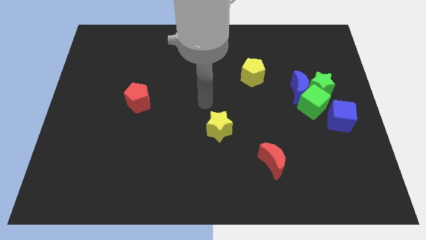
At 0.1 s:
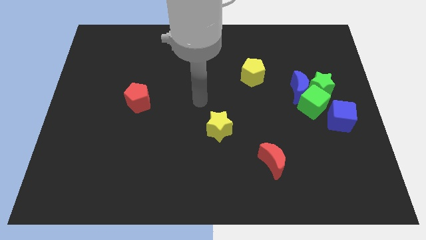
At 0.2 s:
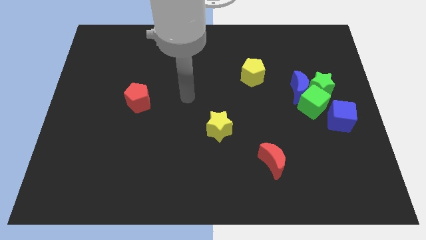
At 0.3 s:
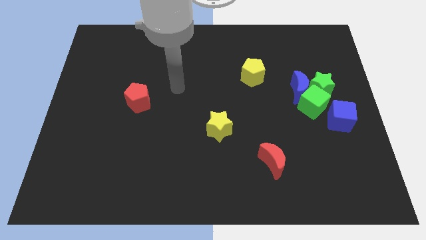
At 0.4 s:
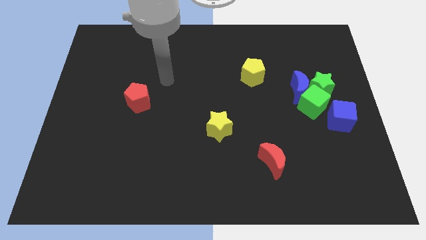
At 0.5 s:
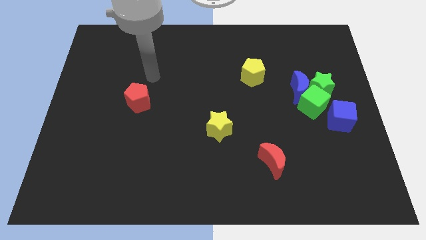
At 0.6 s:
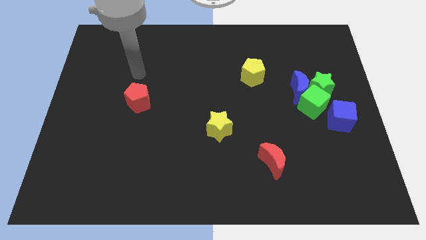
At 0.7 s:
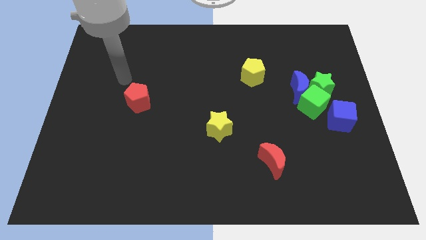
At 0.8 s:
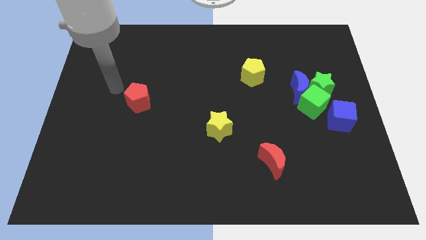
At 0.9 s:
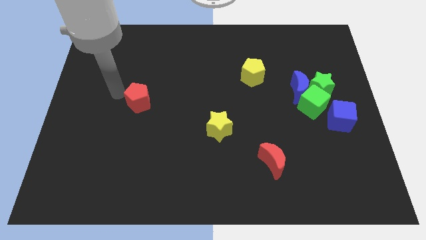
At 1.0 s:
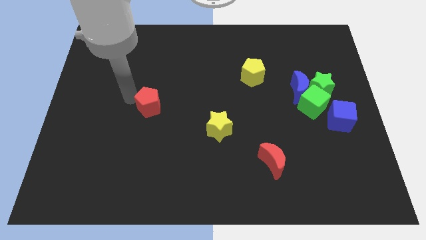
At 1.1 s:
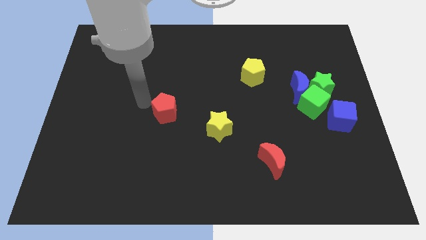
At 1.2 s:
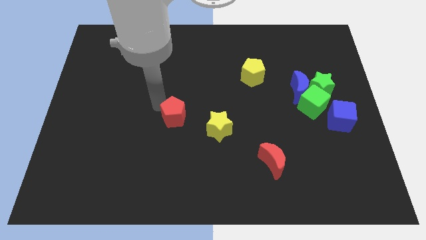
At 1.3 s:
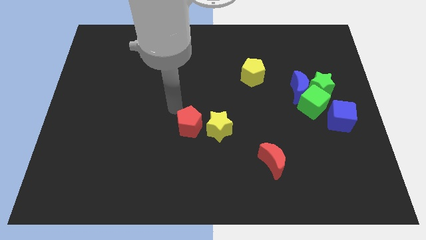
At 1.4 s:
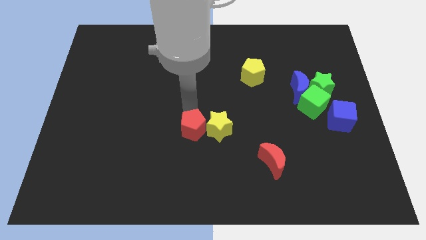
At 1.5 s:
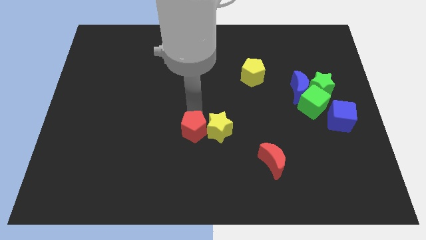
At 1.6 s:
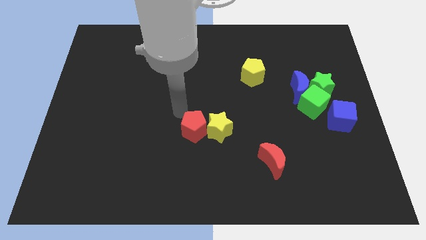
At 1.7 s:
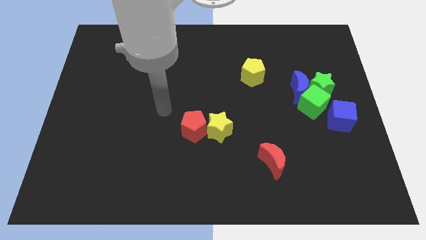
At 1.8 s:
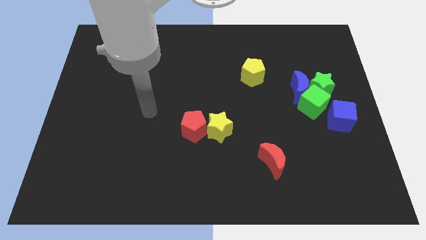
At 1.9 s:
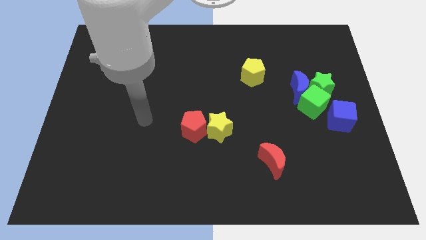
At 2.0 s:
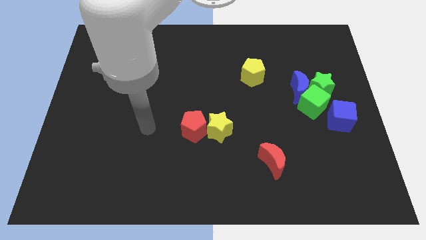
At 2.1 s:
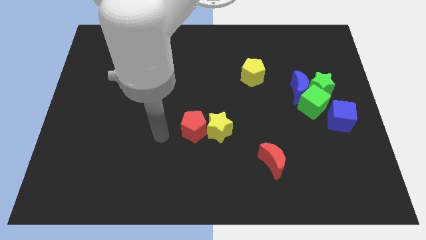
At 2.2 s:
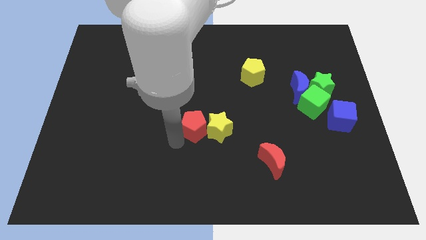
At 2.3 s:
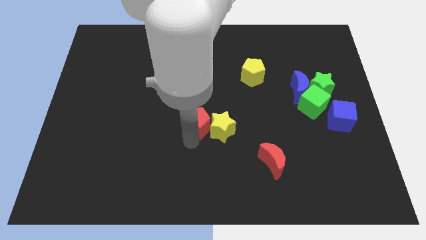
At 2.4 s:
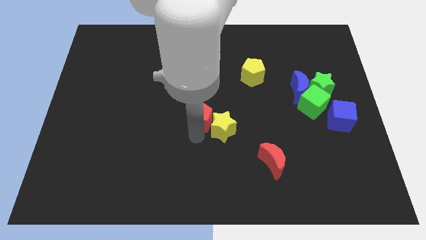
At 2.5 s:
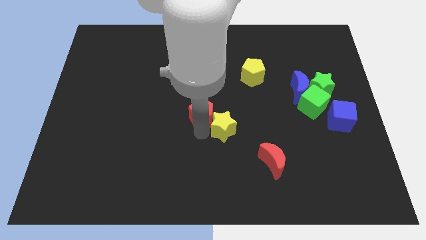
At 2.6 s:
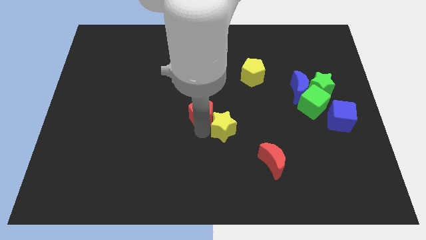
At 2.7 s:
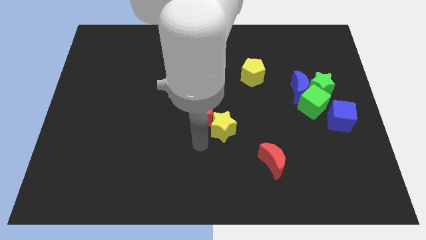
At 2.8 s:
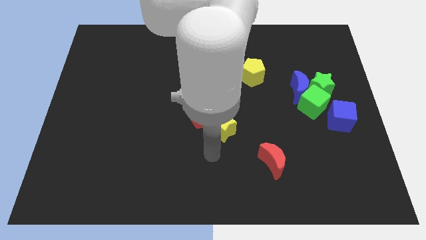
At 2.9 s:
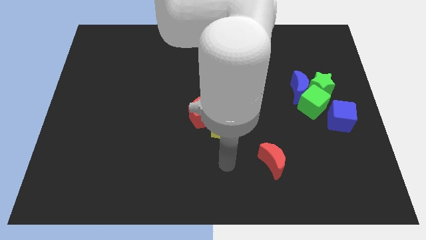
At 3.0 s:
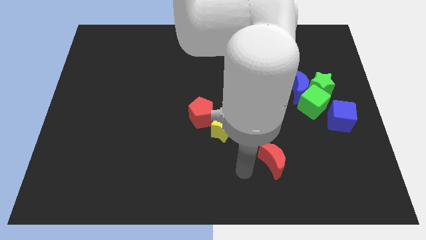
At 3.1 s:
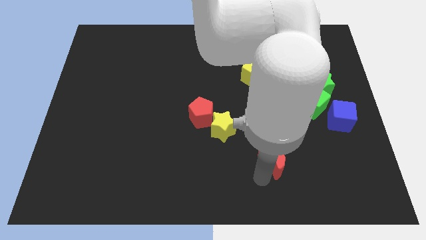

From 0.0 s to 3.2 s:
push the red pentagon into the yellow star

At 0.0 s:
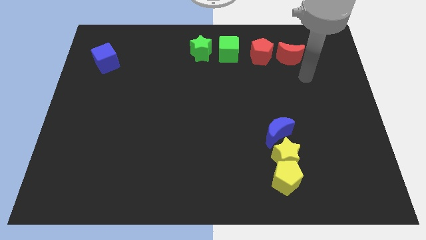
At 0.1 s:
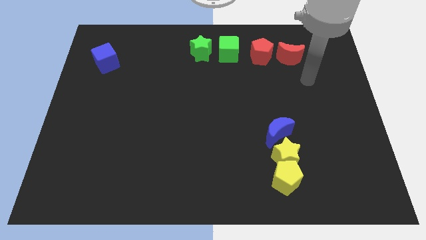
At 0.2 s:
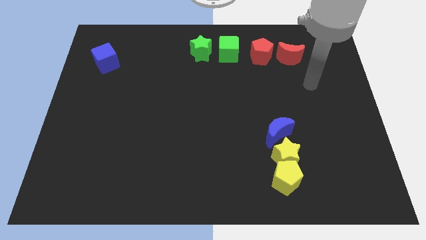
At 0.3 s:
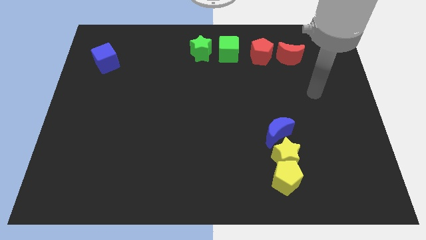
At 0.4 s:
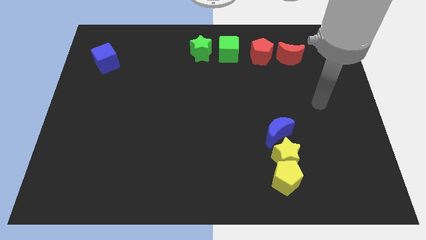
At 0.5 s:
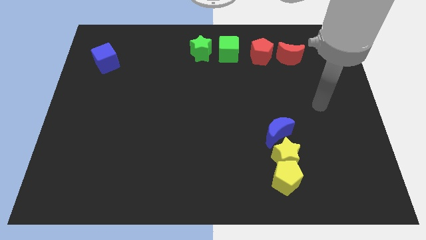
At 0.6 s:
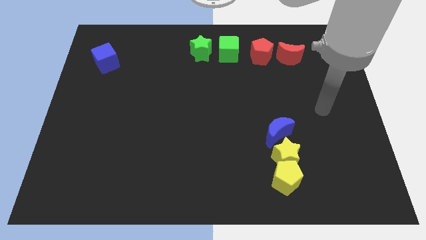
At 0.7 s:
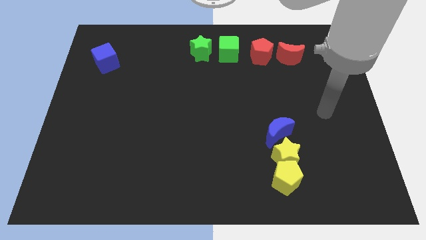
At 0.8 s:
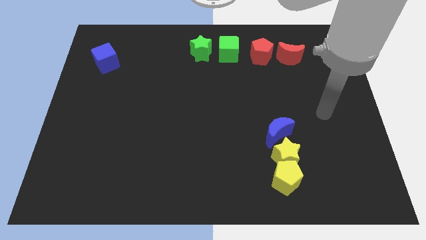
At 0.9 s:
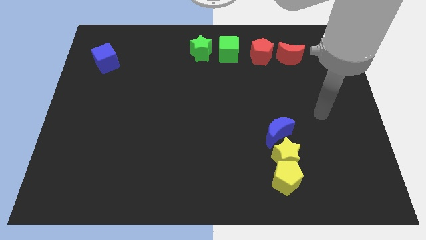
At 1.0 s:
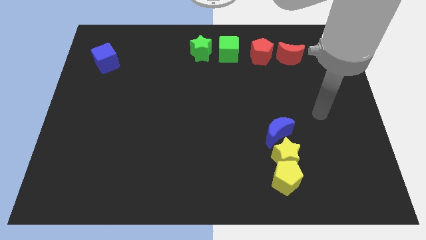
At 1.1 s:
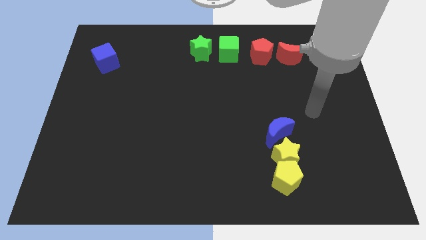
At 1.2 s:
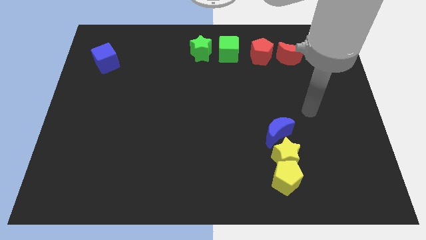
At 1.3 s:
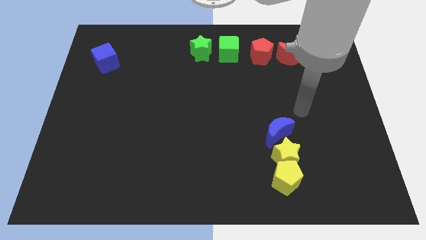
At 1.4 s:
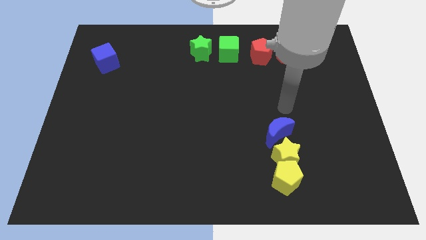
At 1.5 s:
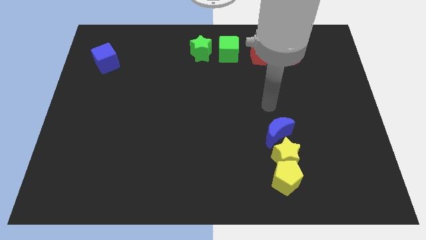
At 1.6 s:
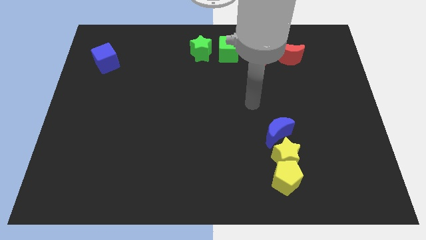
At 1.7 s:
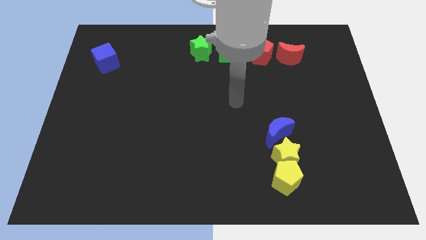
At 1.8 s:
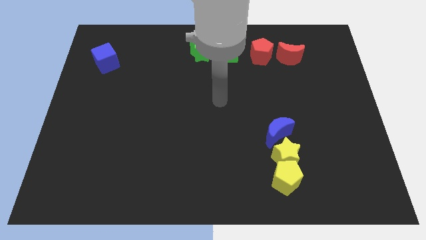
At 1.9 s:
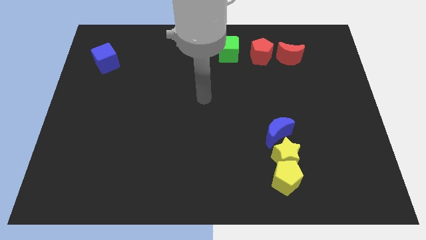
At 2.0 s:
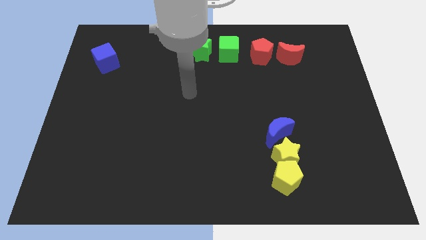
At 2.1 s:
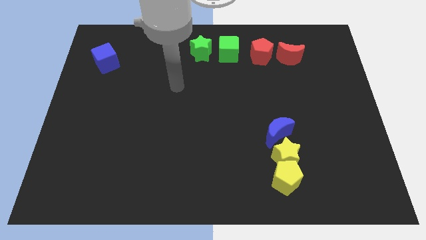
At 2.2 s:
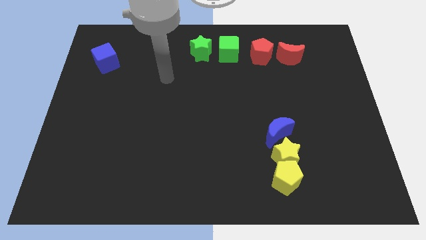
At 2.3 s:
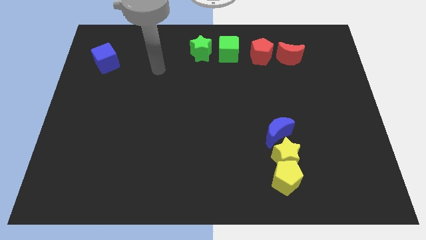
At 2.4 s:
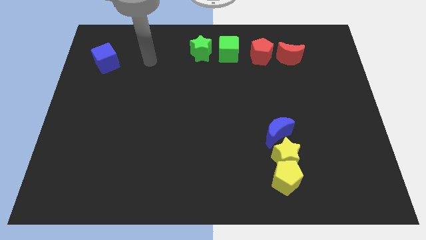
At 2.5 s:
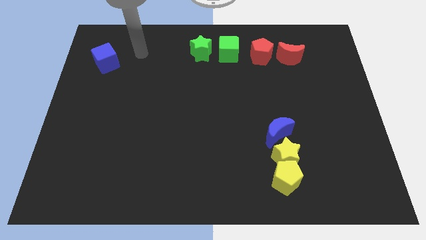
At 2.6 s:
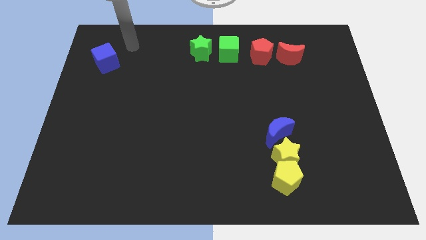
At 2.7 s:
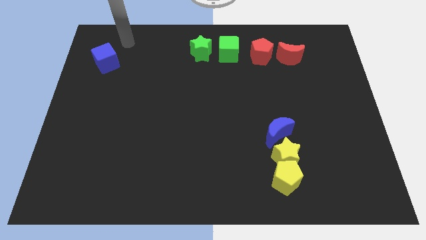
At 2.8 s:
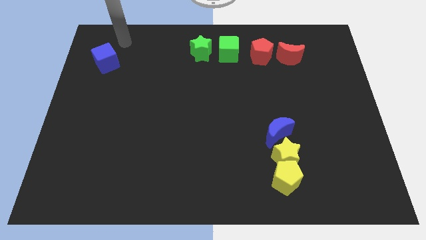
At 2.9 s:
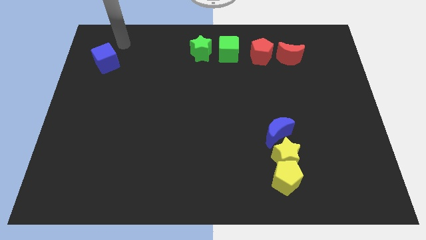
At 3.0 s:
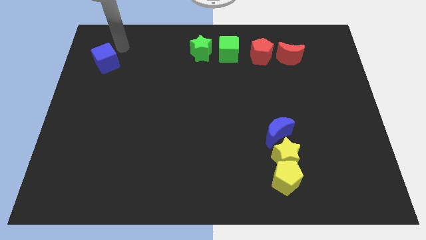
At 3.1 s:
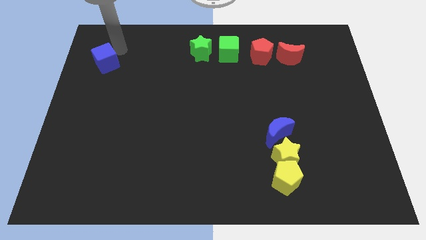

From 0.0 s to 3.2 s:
move your arm away from the red moon

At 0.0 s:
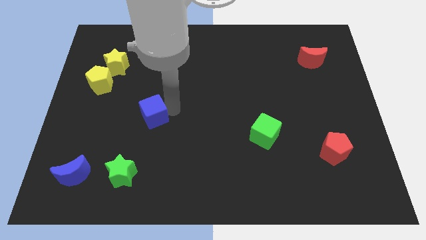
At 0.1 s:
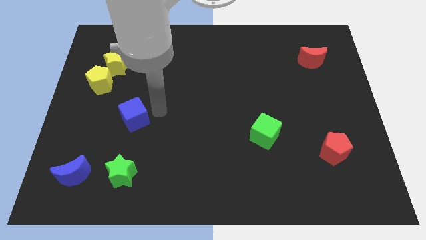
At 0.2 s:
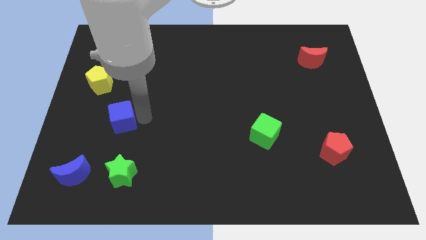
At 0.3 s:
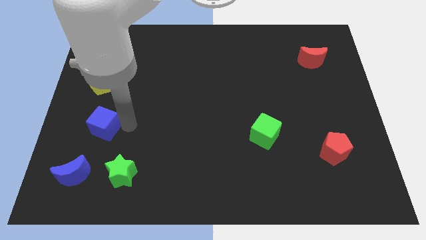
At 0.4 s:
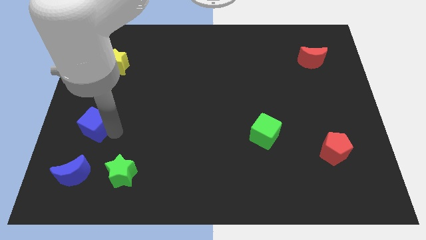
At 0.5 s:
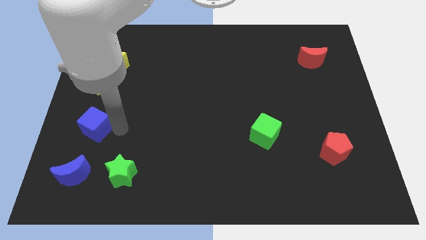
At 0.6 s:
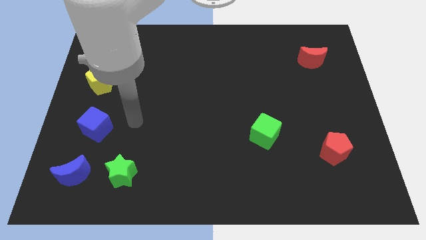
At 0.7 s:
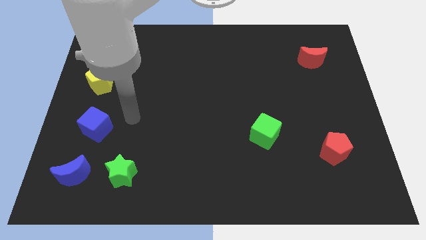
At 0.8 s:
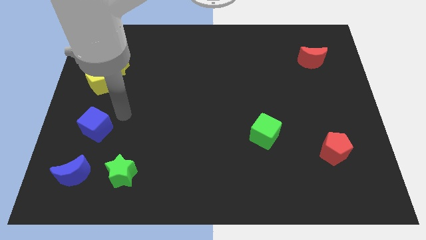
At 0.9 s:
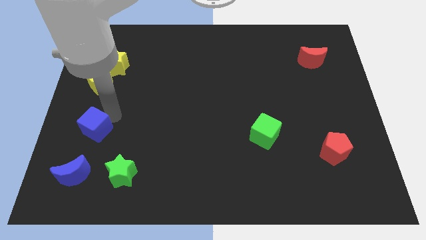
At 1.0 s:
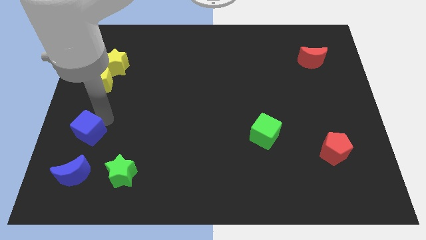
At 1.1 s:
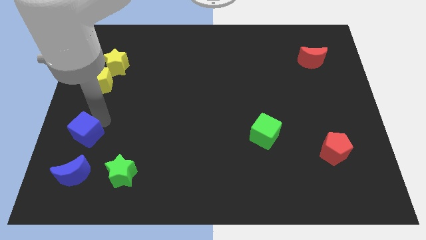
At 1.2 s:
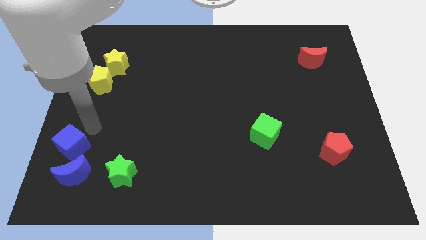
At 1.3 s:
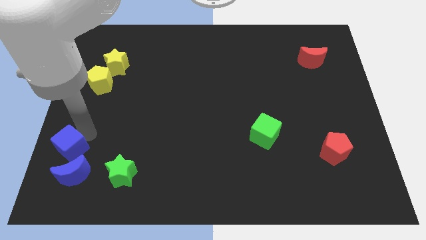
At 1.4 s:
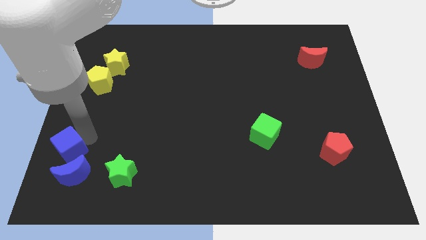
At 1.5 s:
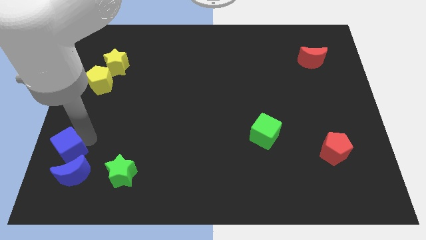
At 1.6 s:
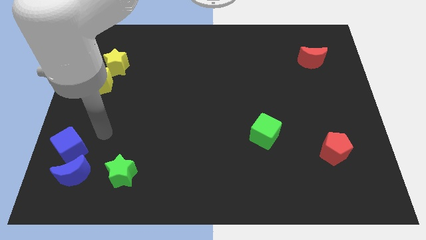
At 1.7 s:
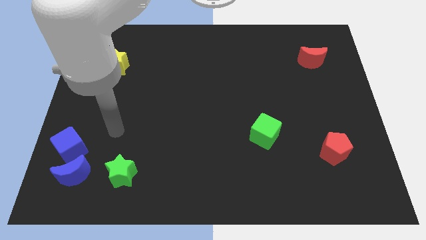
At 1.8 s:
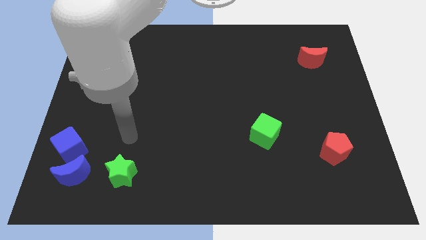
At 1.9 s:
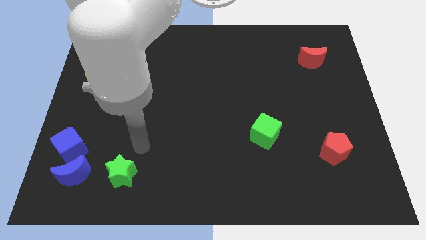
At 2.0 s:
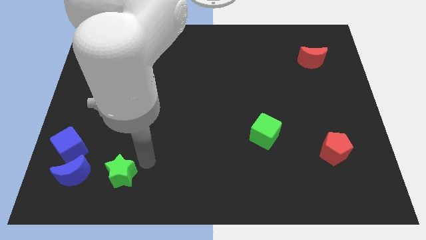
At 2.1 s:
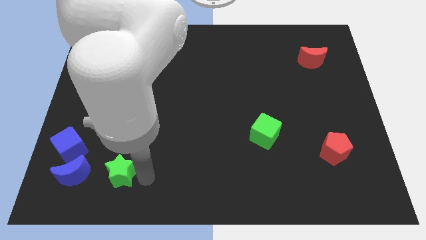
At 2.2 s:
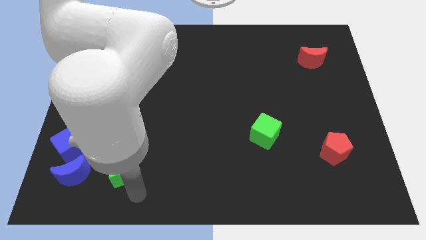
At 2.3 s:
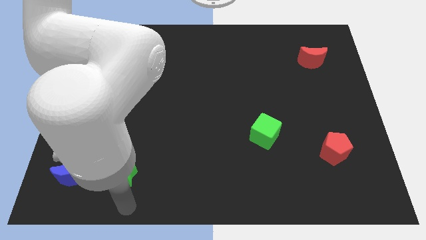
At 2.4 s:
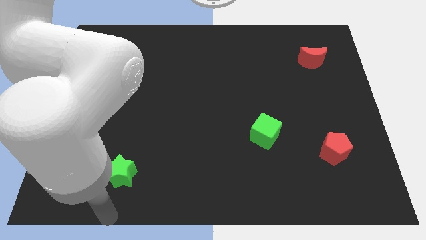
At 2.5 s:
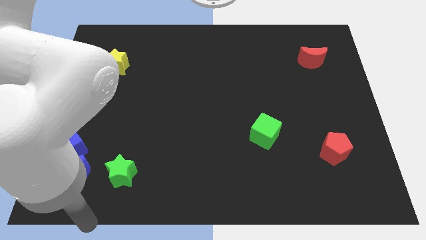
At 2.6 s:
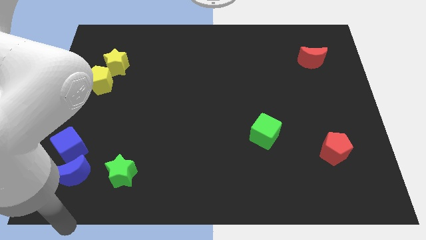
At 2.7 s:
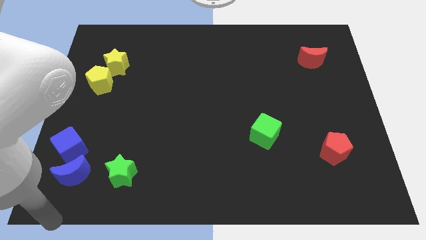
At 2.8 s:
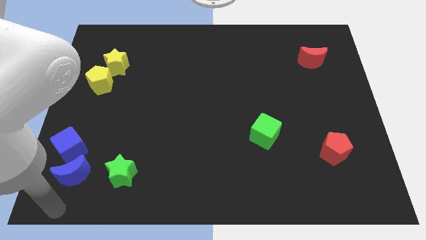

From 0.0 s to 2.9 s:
place the blue cube at the top of blue moon
